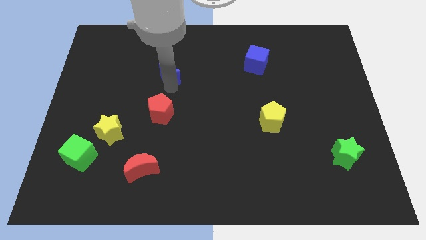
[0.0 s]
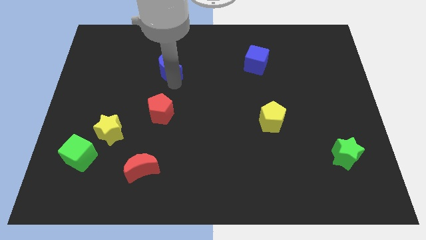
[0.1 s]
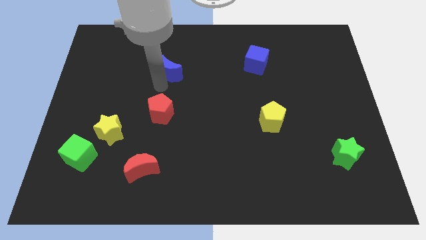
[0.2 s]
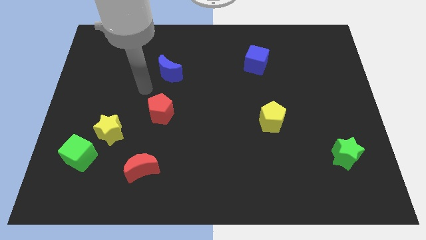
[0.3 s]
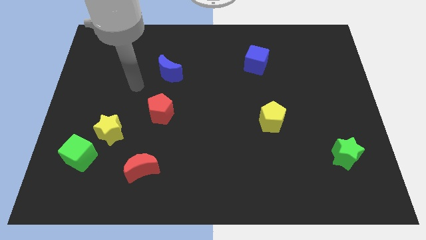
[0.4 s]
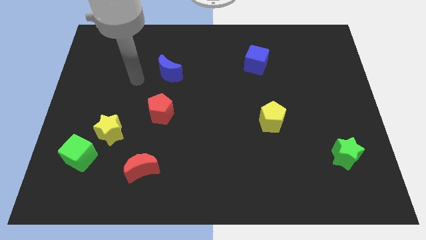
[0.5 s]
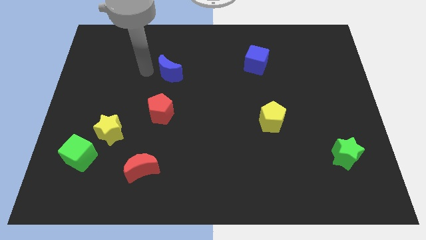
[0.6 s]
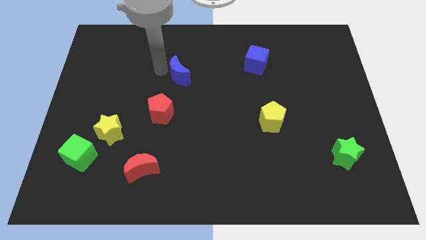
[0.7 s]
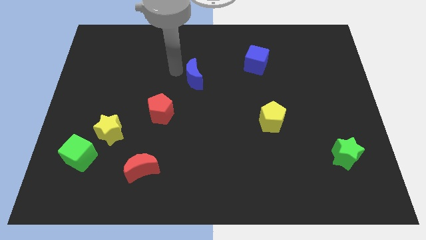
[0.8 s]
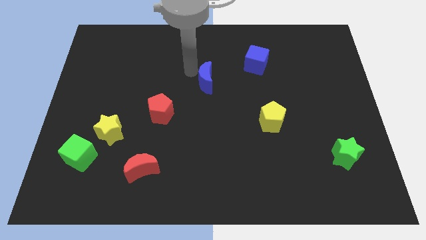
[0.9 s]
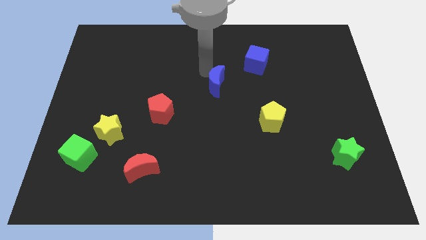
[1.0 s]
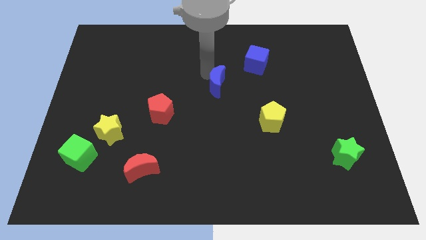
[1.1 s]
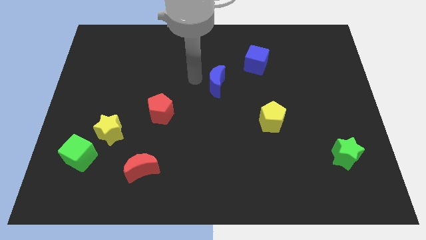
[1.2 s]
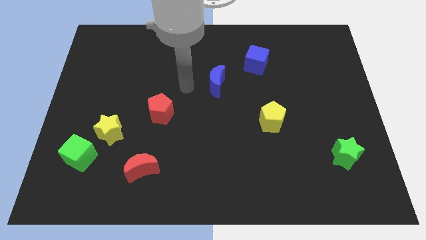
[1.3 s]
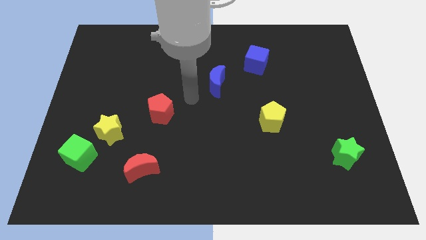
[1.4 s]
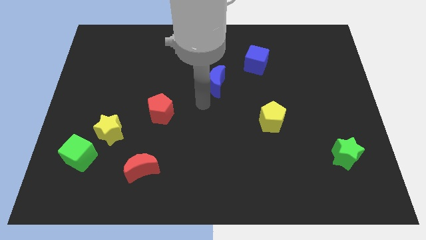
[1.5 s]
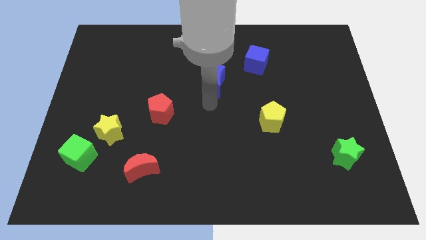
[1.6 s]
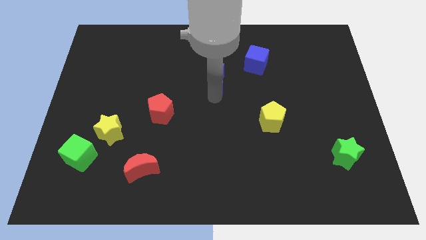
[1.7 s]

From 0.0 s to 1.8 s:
place the blue moon diagonally in between the blue cube and red pentagon

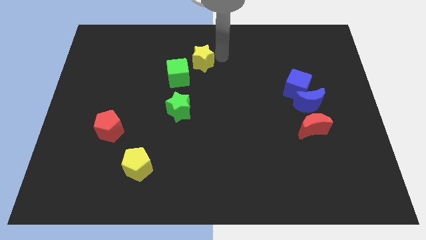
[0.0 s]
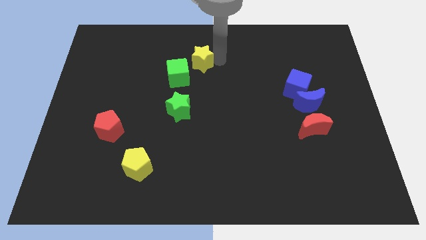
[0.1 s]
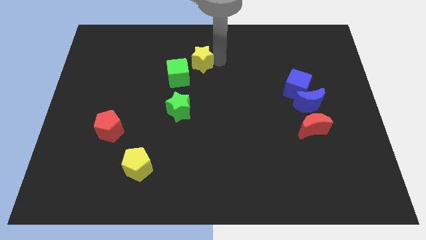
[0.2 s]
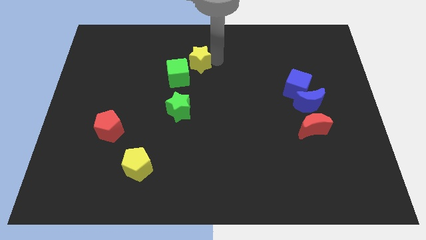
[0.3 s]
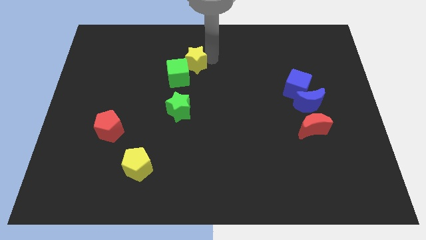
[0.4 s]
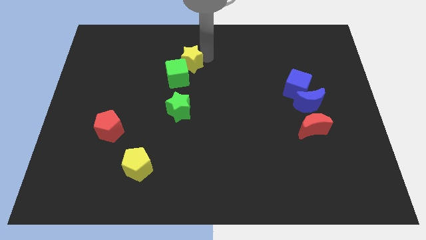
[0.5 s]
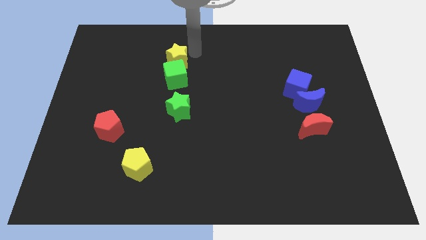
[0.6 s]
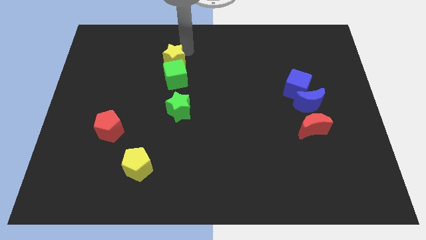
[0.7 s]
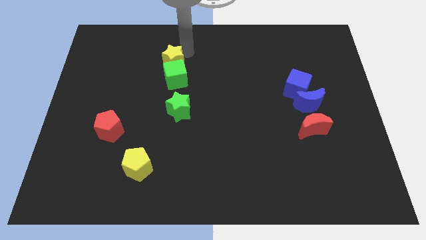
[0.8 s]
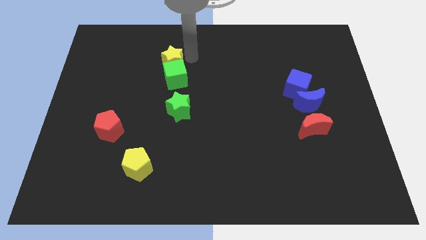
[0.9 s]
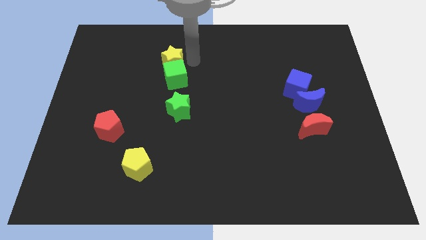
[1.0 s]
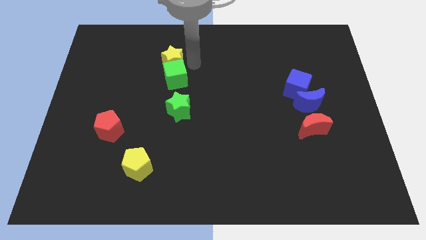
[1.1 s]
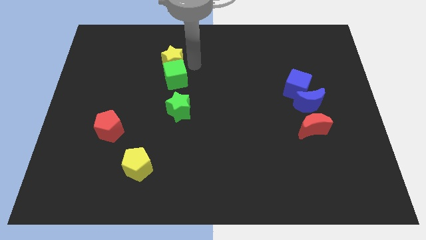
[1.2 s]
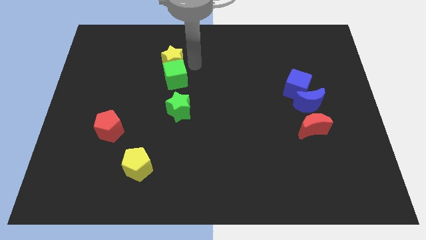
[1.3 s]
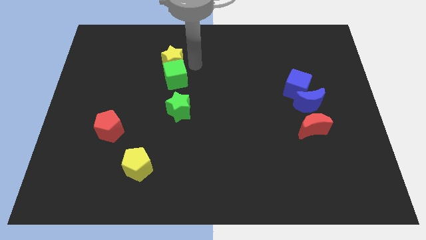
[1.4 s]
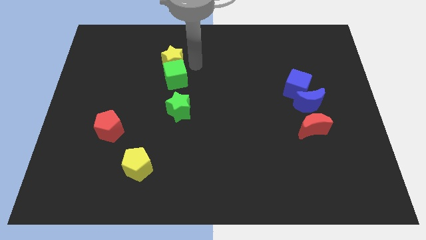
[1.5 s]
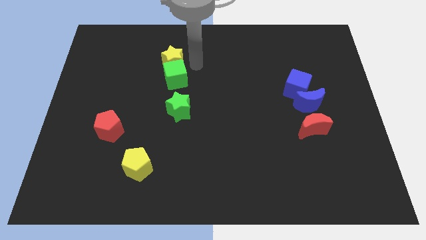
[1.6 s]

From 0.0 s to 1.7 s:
place the yellow star above the green cube

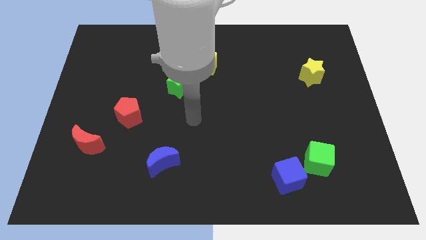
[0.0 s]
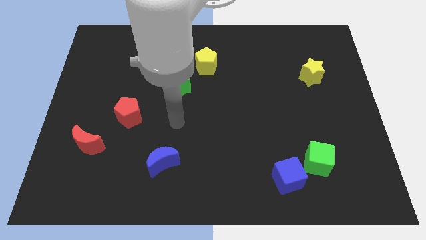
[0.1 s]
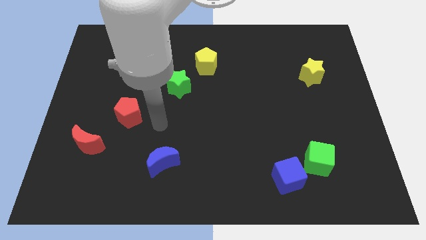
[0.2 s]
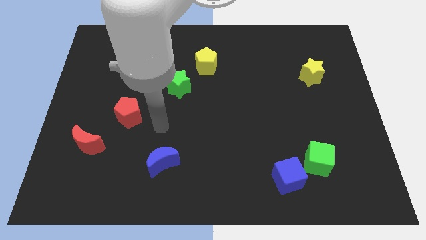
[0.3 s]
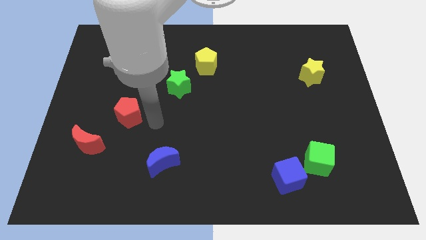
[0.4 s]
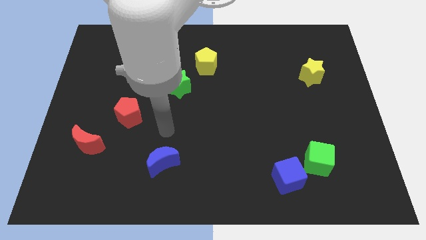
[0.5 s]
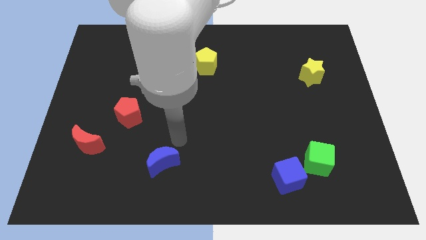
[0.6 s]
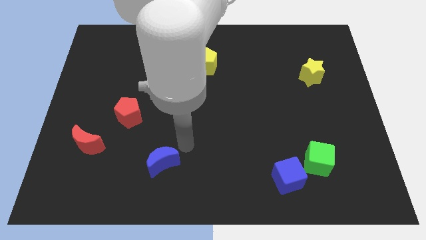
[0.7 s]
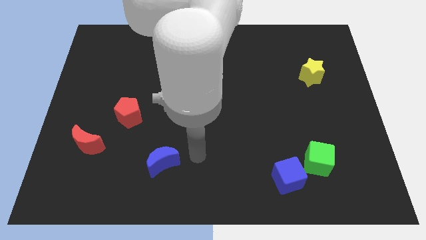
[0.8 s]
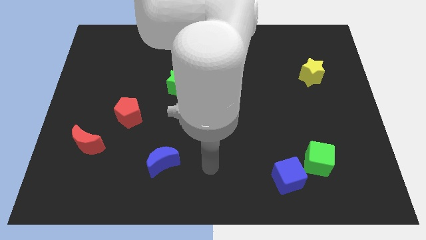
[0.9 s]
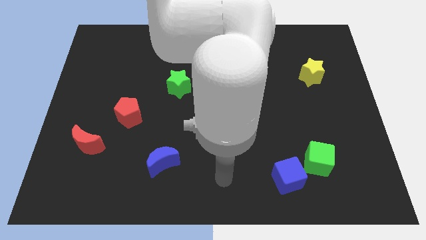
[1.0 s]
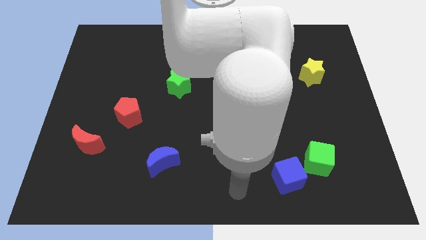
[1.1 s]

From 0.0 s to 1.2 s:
move the arm towards the bottom centre

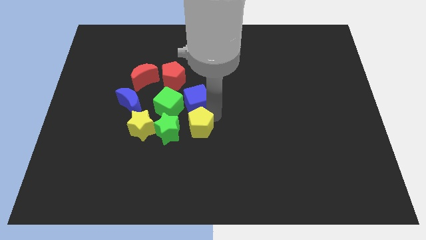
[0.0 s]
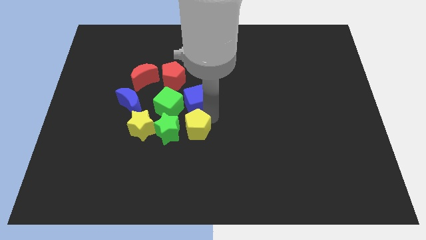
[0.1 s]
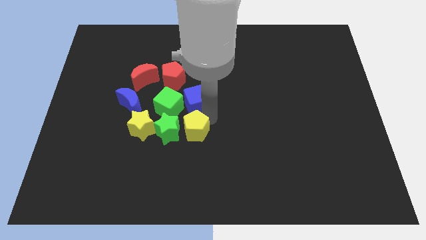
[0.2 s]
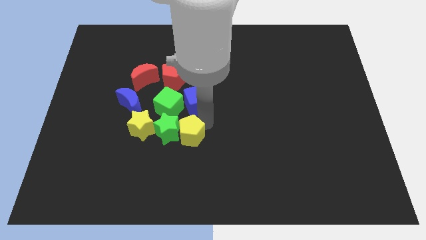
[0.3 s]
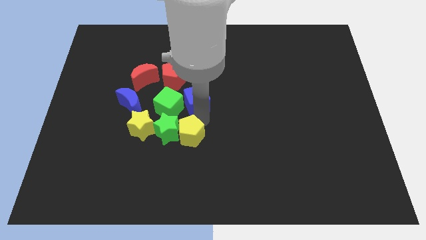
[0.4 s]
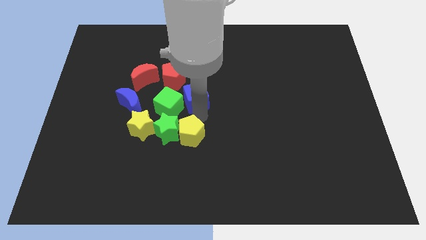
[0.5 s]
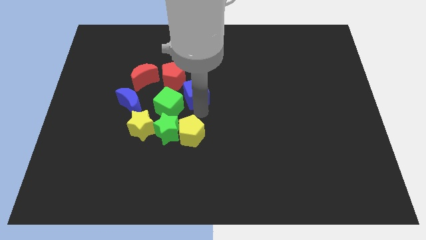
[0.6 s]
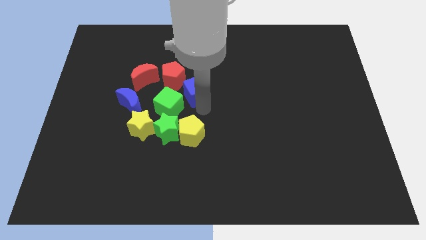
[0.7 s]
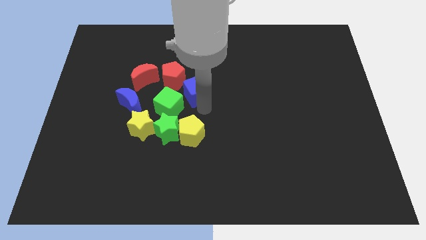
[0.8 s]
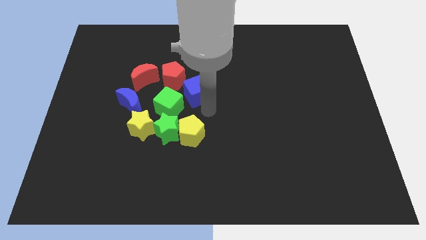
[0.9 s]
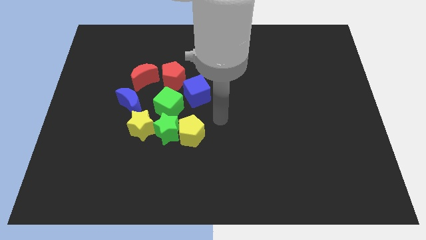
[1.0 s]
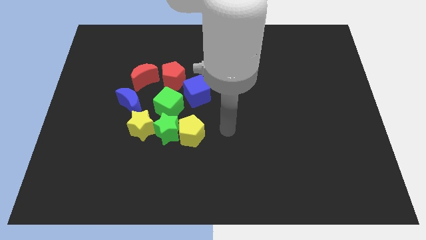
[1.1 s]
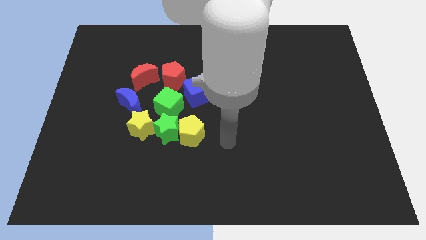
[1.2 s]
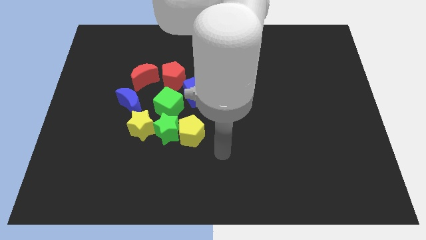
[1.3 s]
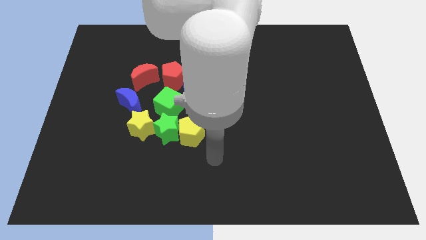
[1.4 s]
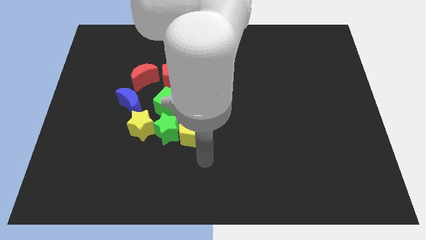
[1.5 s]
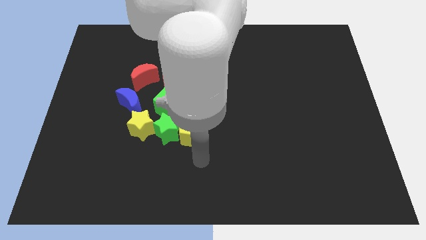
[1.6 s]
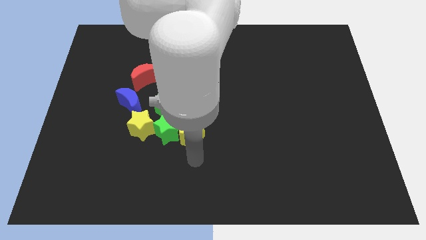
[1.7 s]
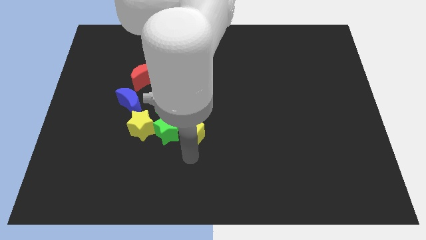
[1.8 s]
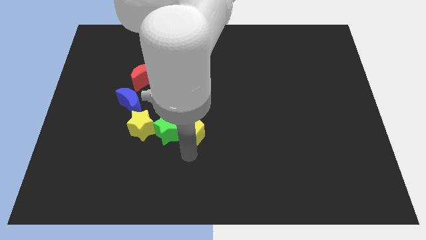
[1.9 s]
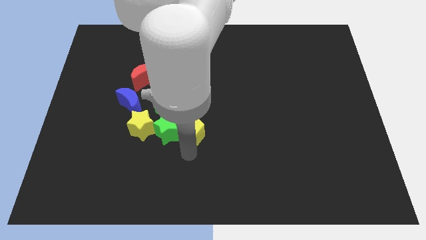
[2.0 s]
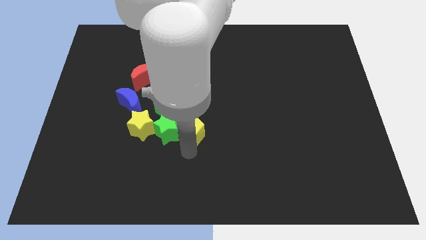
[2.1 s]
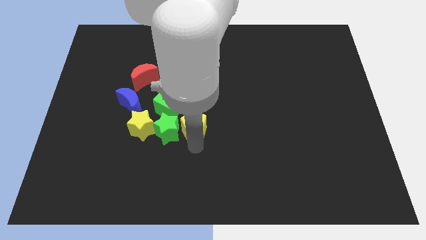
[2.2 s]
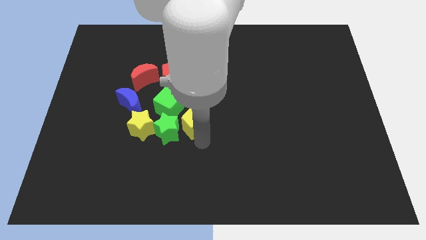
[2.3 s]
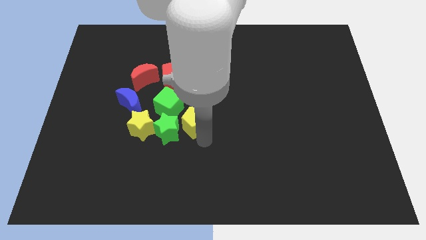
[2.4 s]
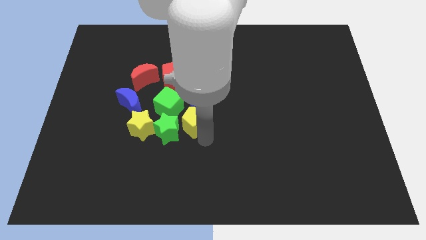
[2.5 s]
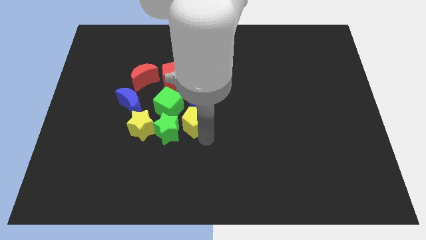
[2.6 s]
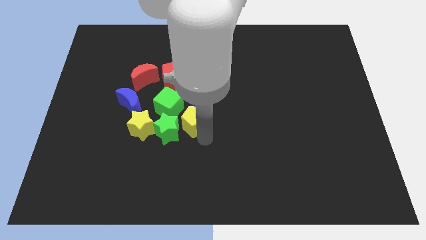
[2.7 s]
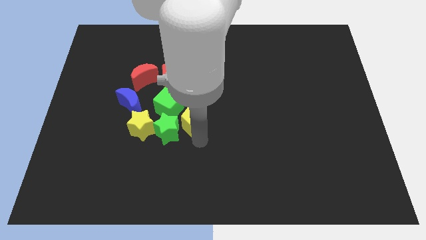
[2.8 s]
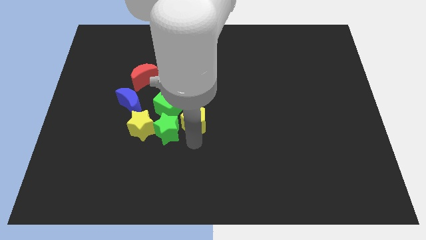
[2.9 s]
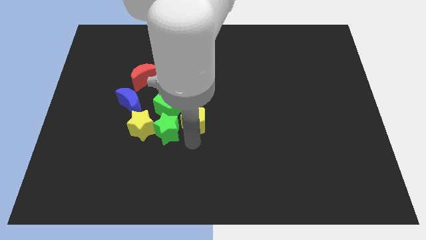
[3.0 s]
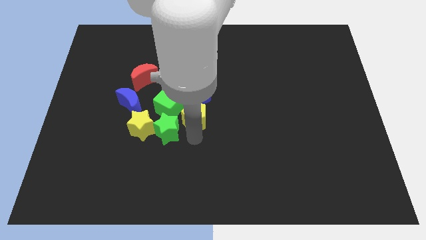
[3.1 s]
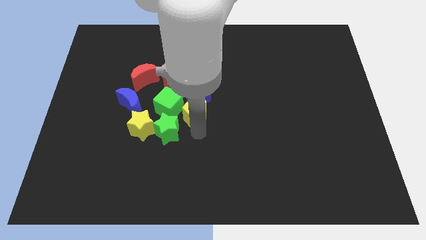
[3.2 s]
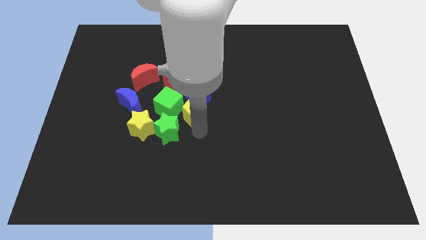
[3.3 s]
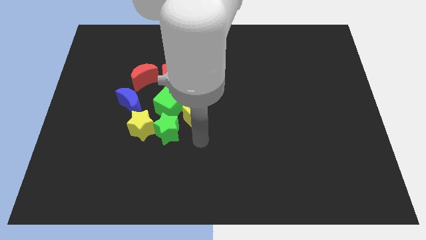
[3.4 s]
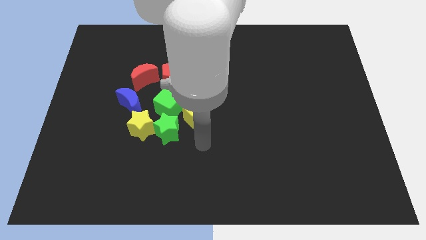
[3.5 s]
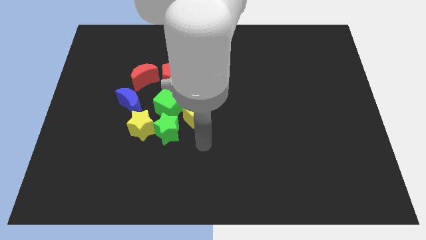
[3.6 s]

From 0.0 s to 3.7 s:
adjust the yellow pentagon and blue cube to form a group

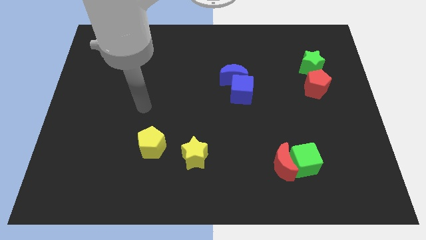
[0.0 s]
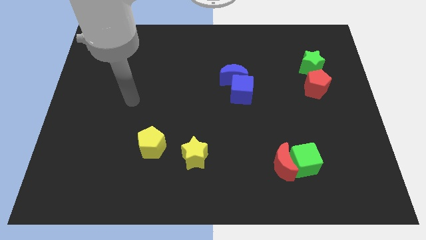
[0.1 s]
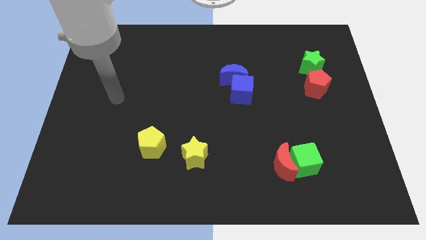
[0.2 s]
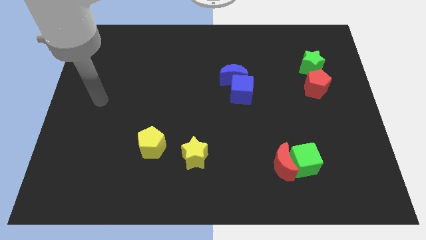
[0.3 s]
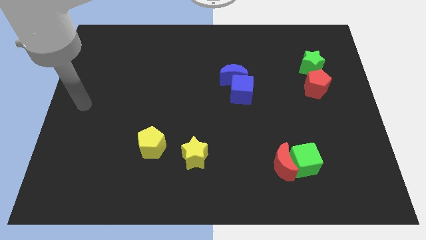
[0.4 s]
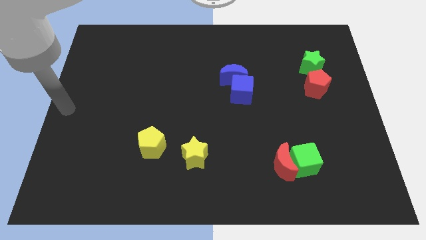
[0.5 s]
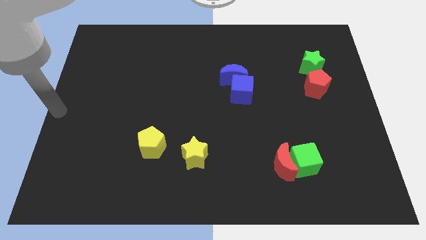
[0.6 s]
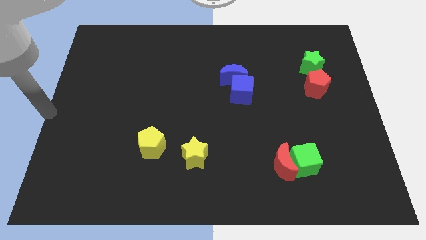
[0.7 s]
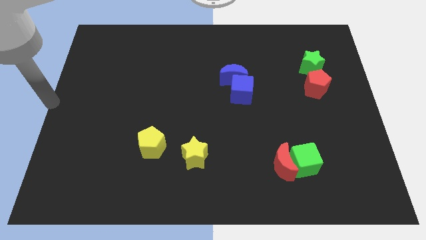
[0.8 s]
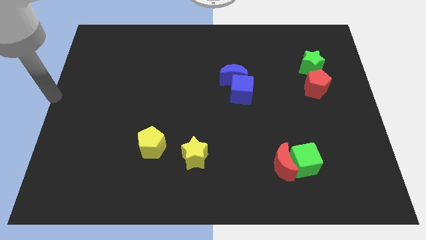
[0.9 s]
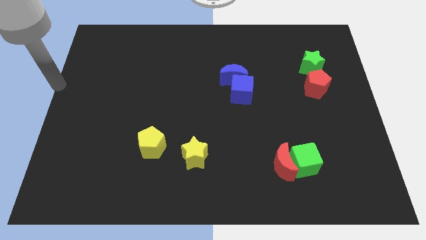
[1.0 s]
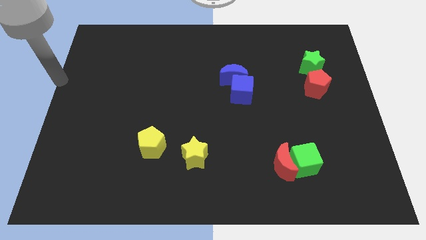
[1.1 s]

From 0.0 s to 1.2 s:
move your hand to the left end of the board
